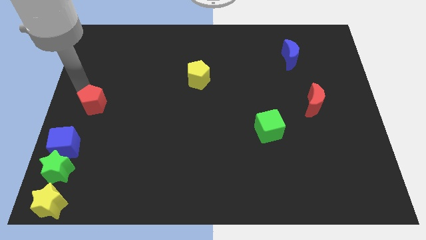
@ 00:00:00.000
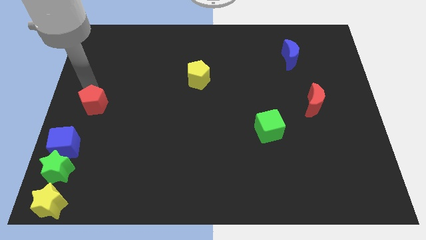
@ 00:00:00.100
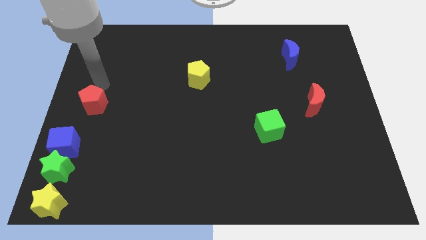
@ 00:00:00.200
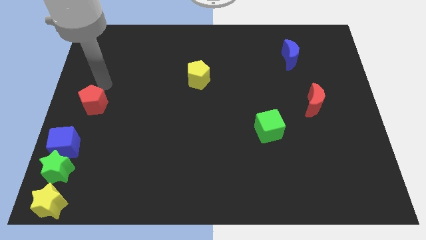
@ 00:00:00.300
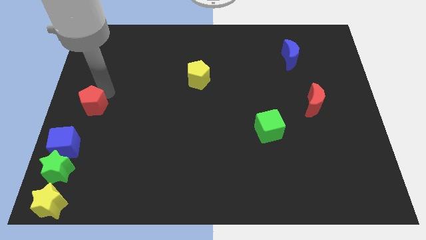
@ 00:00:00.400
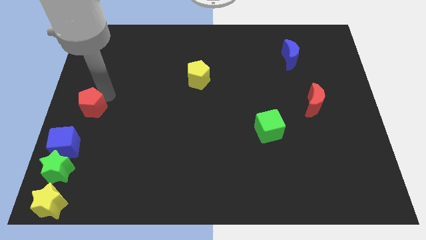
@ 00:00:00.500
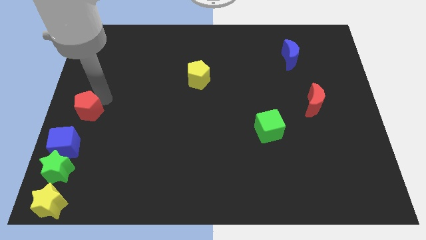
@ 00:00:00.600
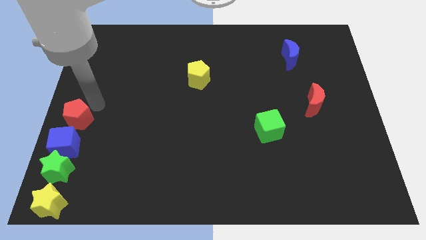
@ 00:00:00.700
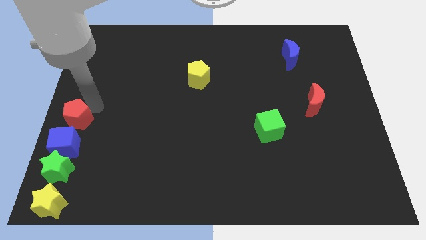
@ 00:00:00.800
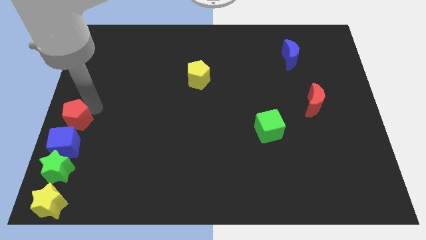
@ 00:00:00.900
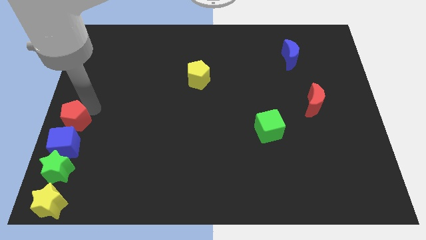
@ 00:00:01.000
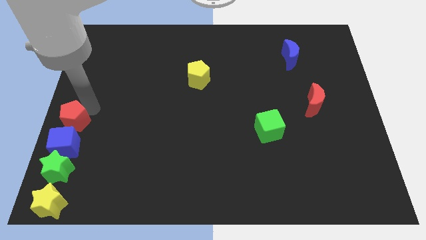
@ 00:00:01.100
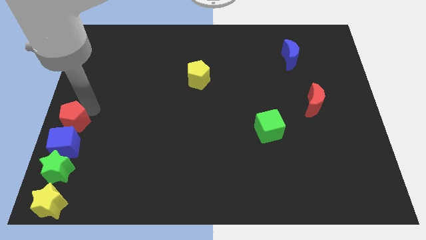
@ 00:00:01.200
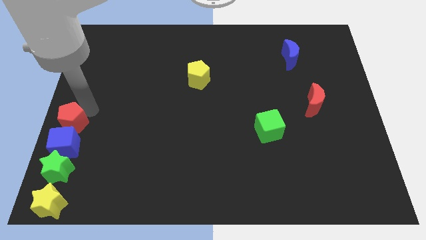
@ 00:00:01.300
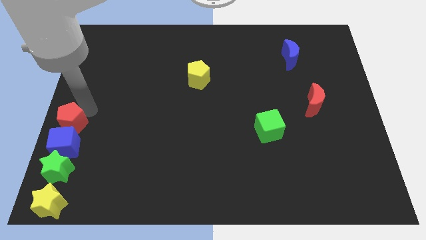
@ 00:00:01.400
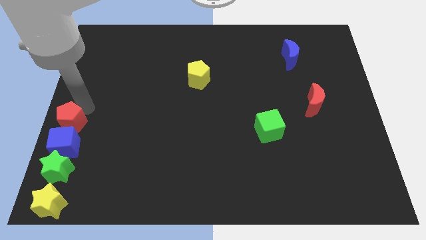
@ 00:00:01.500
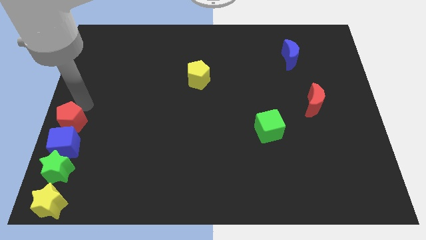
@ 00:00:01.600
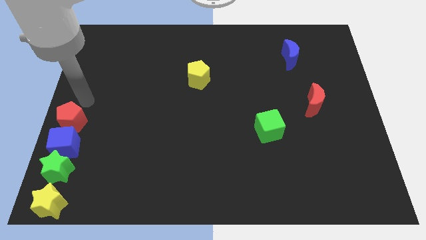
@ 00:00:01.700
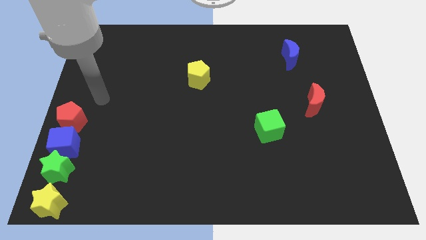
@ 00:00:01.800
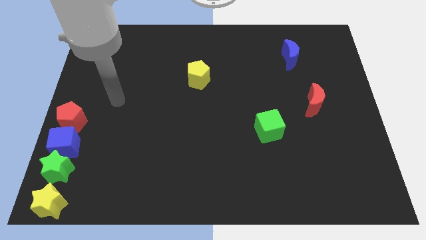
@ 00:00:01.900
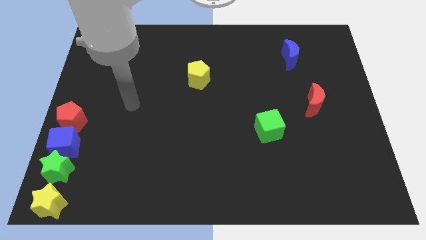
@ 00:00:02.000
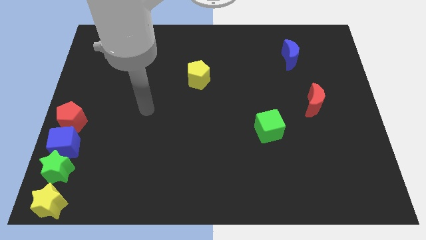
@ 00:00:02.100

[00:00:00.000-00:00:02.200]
place red pentagon at the center left

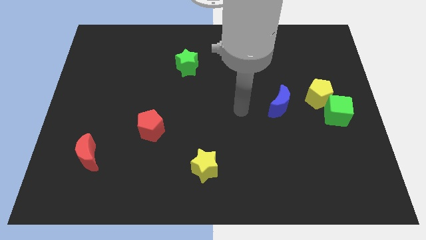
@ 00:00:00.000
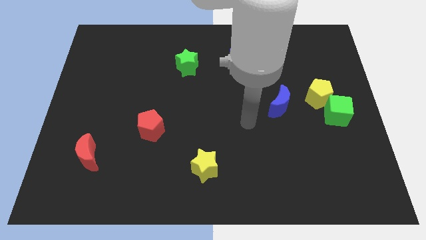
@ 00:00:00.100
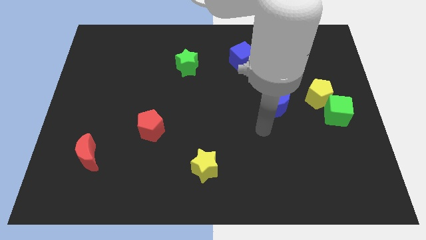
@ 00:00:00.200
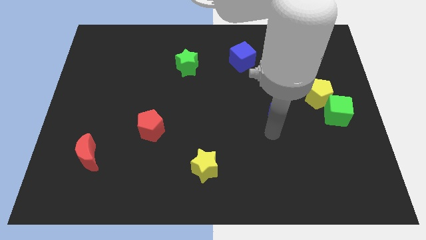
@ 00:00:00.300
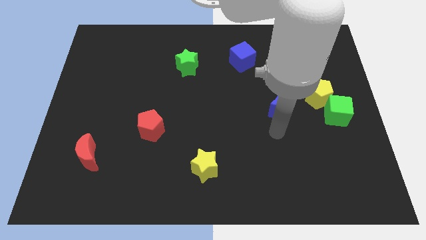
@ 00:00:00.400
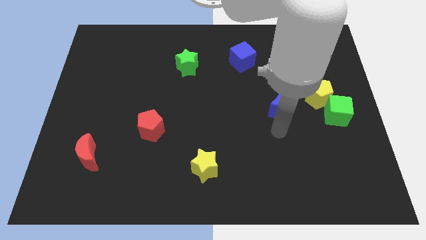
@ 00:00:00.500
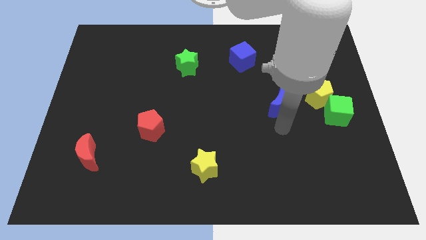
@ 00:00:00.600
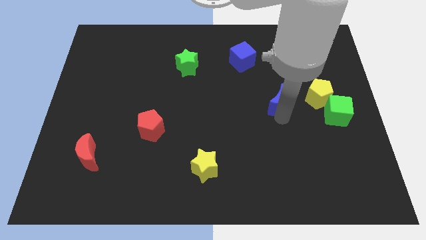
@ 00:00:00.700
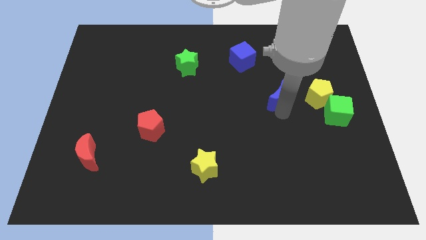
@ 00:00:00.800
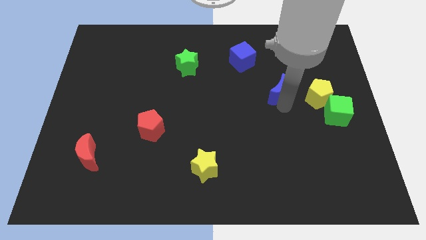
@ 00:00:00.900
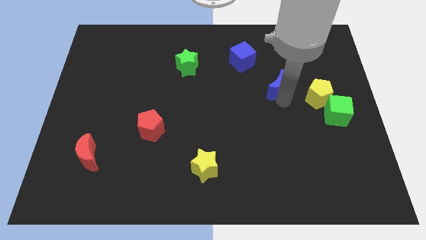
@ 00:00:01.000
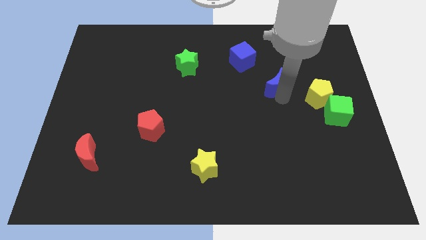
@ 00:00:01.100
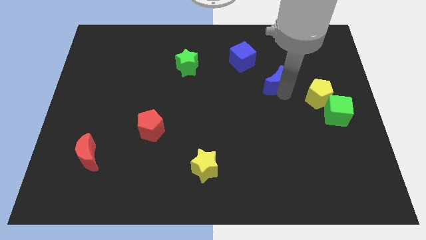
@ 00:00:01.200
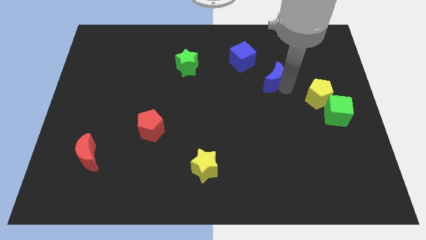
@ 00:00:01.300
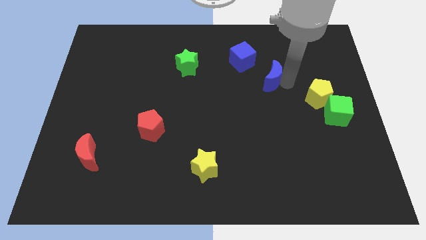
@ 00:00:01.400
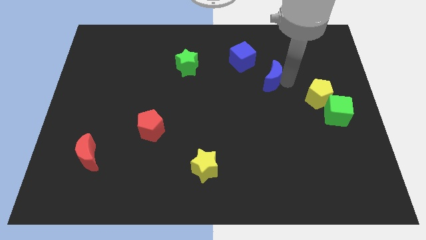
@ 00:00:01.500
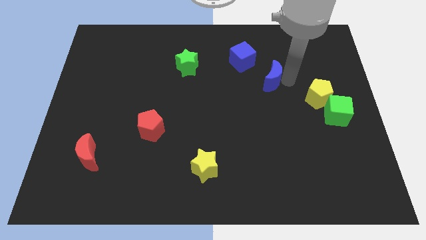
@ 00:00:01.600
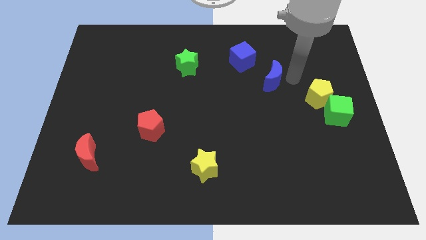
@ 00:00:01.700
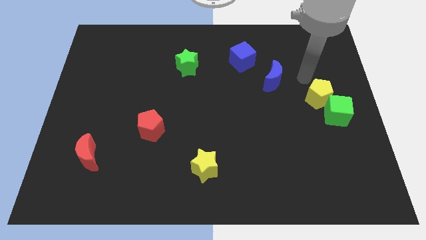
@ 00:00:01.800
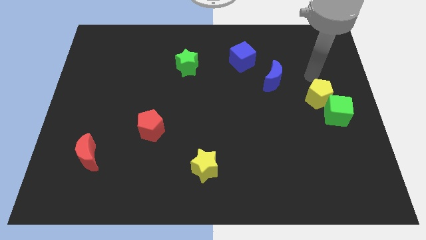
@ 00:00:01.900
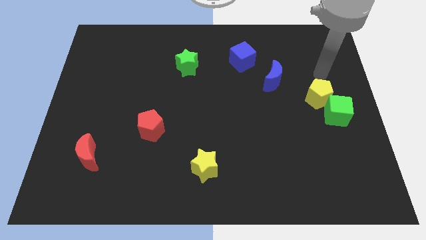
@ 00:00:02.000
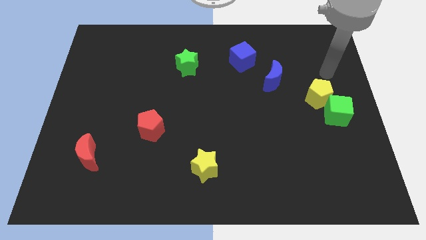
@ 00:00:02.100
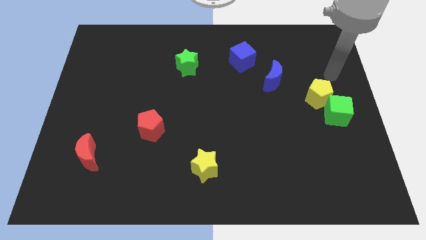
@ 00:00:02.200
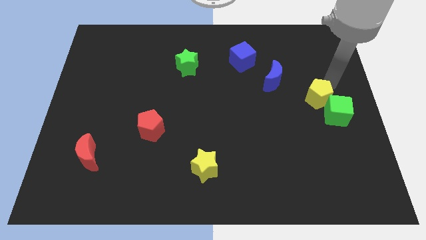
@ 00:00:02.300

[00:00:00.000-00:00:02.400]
place the blue crescent in between the blue cube and the yellow pentagon

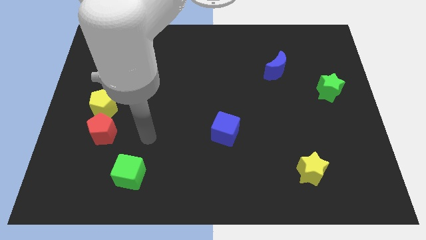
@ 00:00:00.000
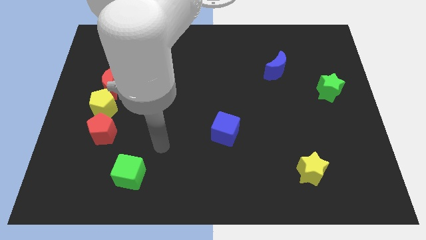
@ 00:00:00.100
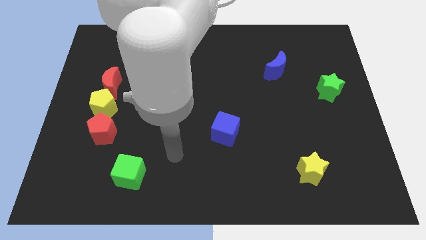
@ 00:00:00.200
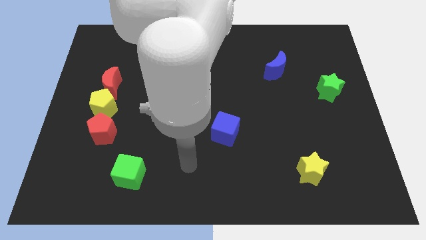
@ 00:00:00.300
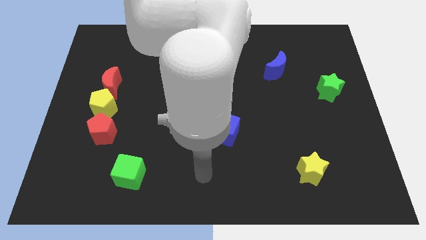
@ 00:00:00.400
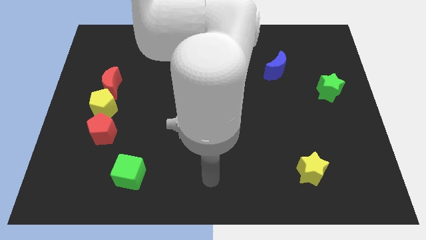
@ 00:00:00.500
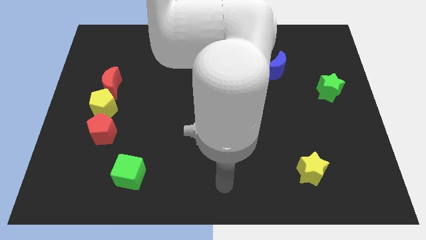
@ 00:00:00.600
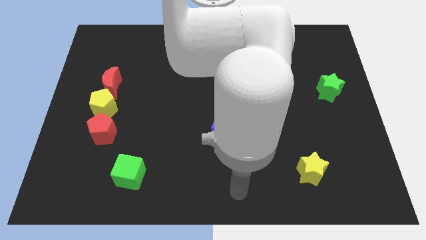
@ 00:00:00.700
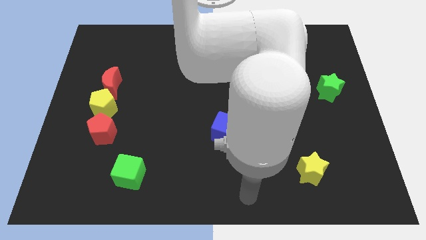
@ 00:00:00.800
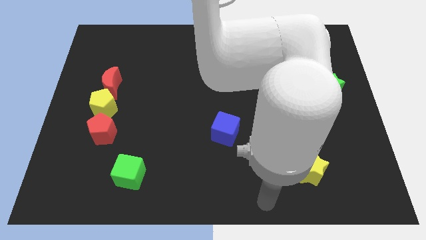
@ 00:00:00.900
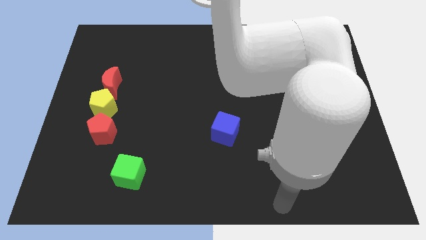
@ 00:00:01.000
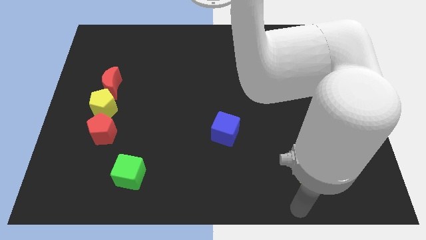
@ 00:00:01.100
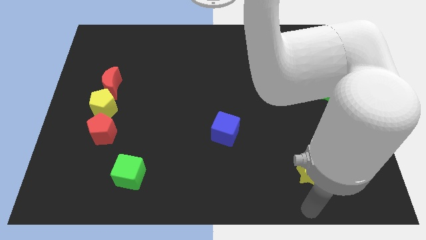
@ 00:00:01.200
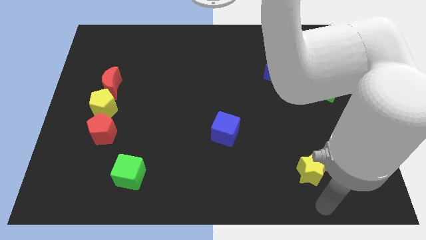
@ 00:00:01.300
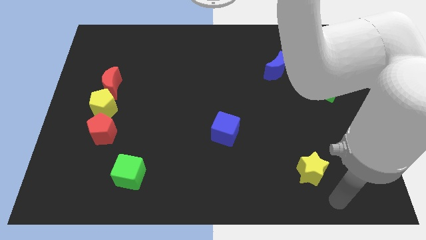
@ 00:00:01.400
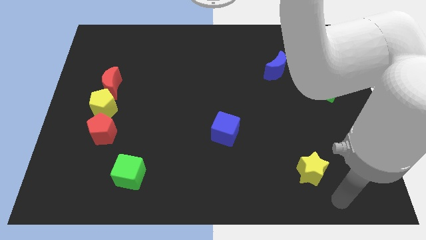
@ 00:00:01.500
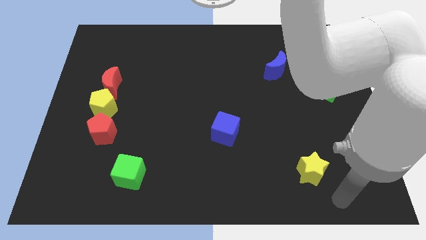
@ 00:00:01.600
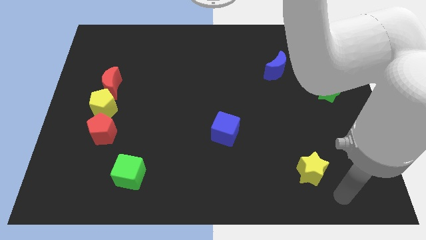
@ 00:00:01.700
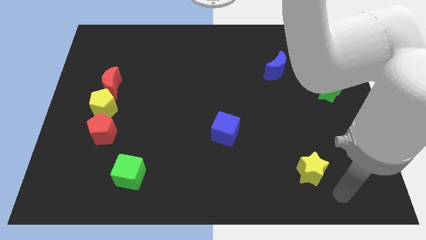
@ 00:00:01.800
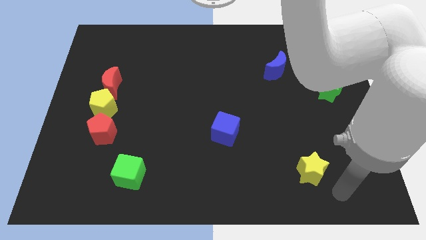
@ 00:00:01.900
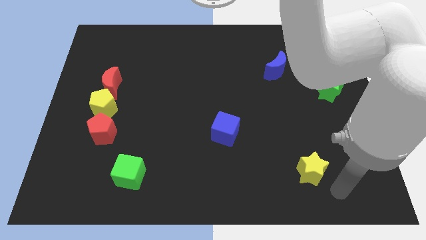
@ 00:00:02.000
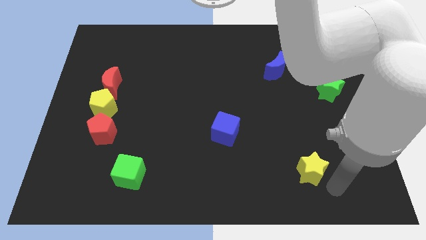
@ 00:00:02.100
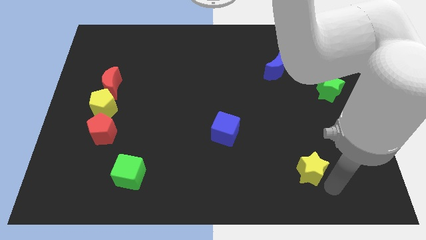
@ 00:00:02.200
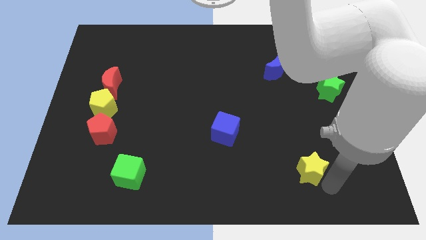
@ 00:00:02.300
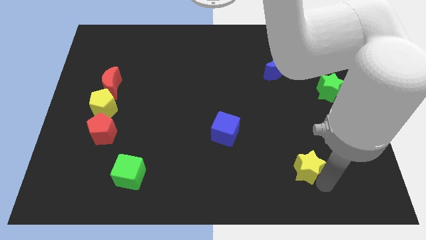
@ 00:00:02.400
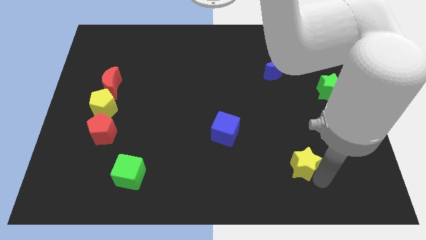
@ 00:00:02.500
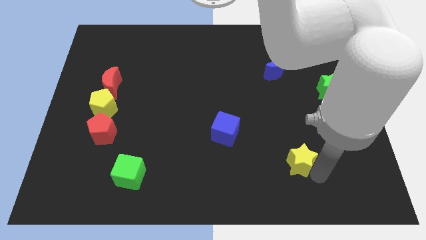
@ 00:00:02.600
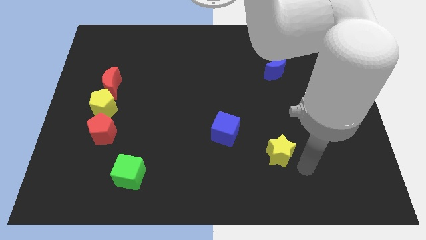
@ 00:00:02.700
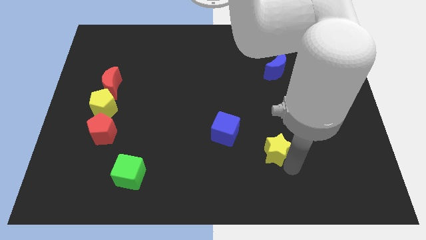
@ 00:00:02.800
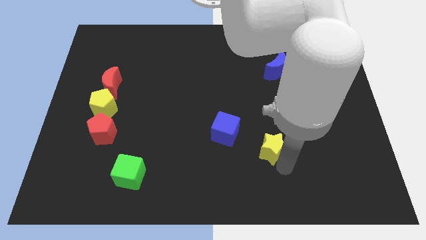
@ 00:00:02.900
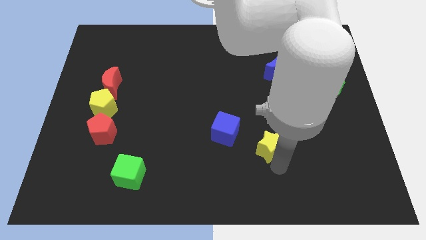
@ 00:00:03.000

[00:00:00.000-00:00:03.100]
slide the yellow star towards the lower right of the blue cube

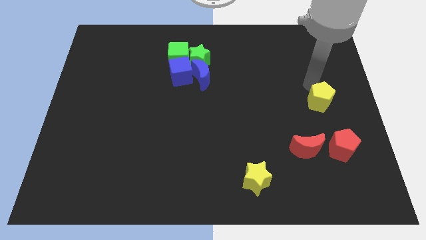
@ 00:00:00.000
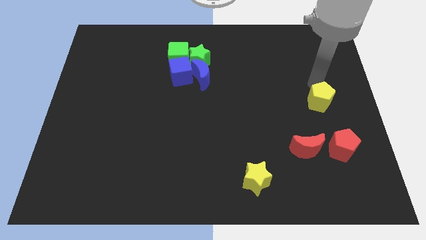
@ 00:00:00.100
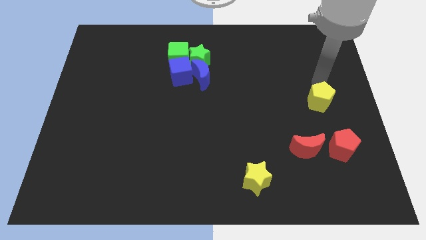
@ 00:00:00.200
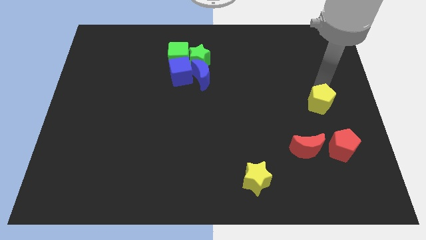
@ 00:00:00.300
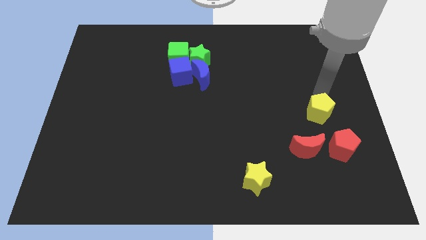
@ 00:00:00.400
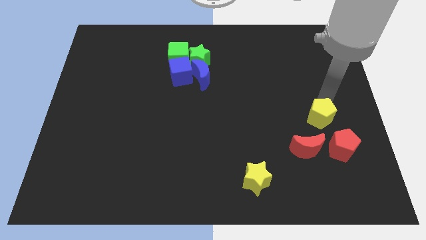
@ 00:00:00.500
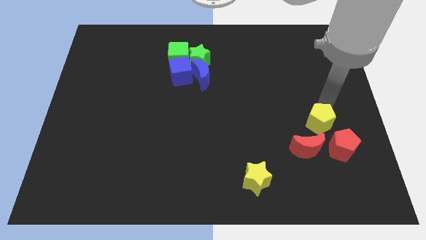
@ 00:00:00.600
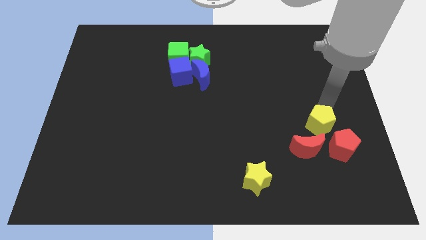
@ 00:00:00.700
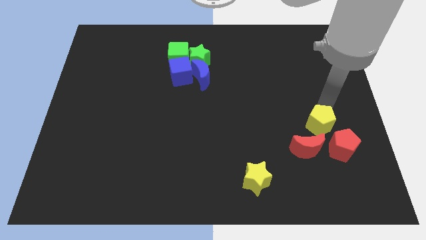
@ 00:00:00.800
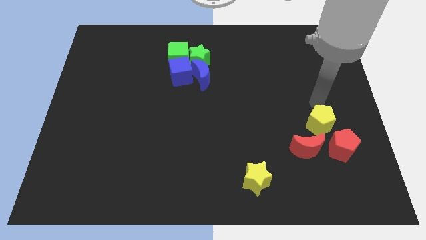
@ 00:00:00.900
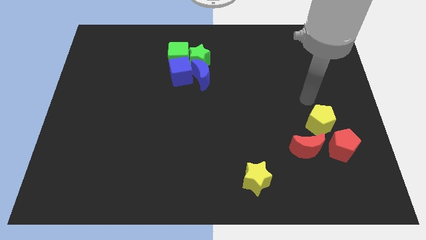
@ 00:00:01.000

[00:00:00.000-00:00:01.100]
move the yellow pentagon close to the top side of the red moon
